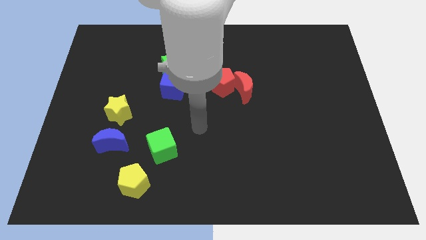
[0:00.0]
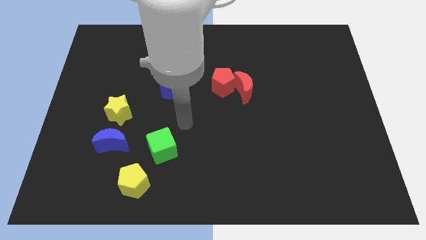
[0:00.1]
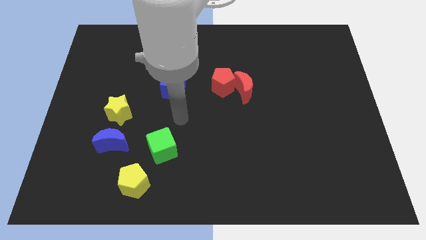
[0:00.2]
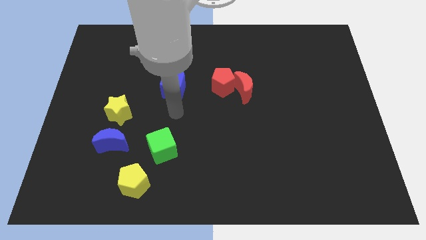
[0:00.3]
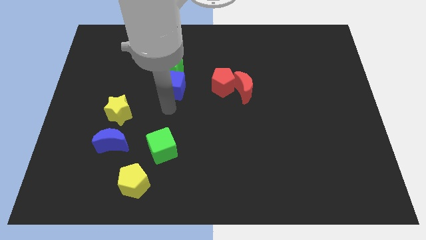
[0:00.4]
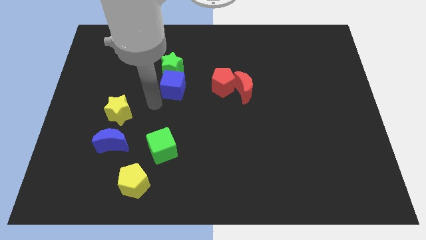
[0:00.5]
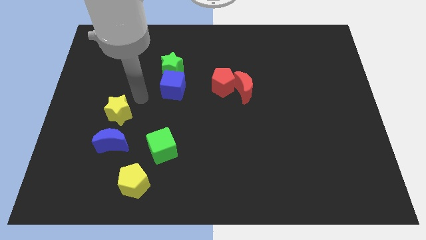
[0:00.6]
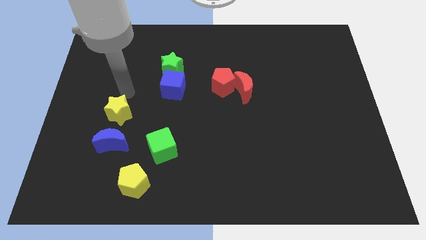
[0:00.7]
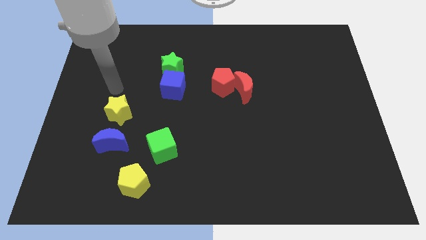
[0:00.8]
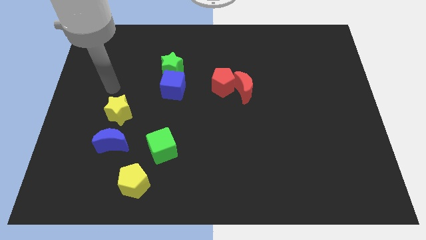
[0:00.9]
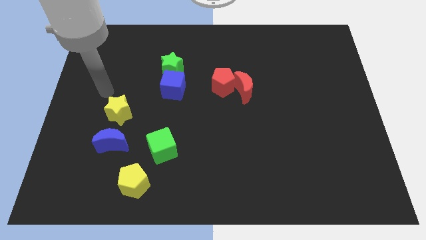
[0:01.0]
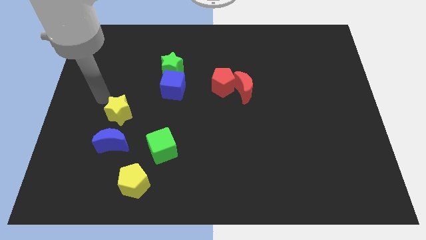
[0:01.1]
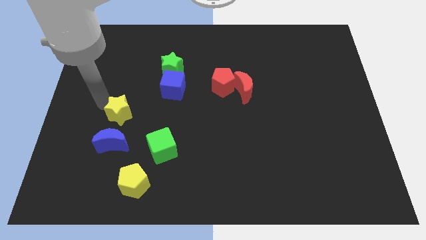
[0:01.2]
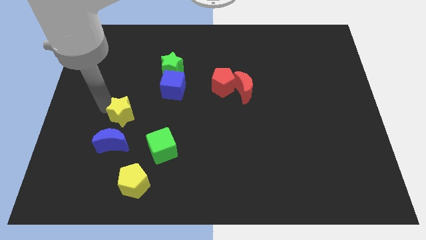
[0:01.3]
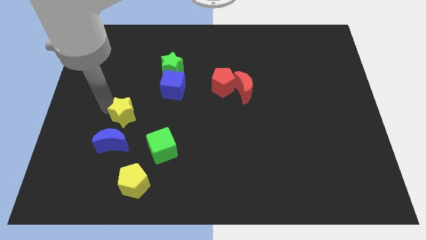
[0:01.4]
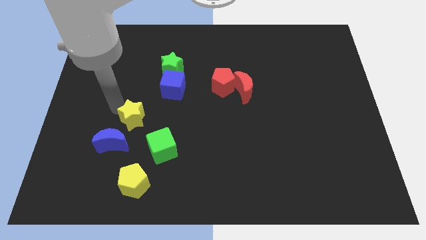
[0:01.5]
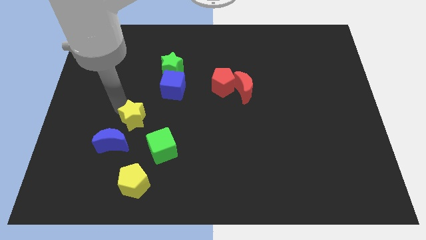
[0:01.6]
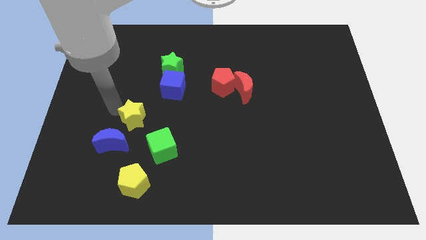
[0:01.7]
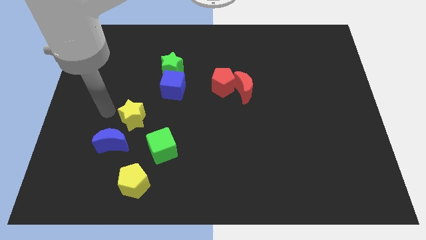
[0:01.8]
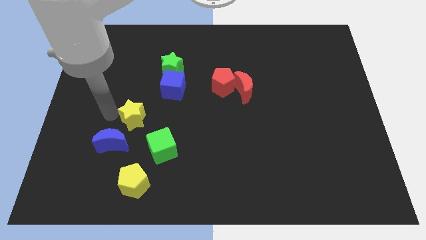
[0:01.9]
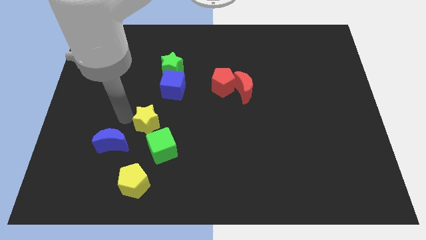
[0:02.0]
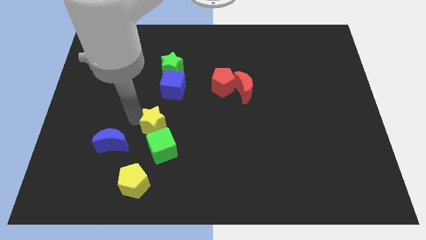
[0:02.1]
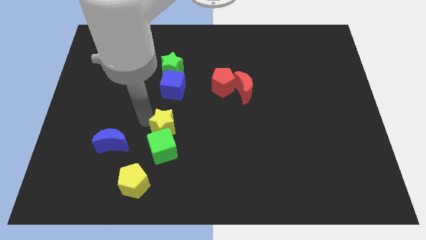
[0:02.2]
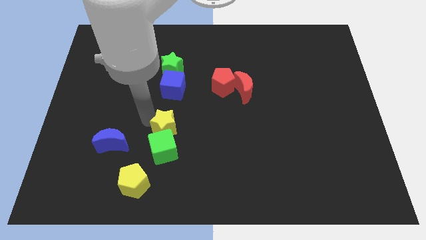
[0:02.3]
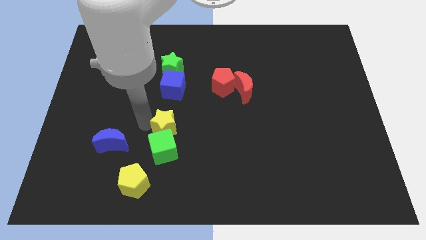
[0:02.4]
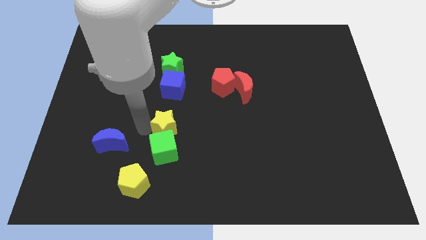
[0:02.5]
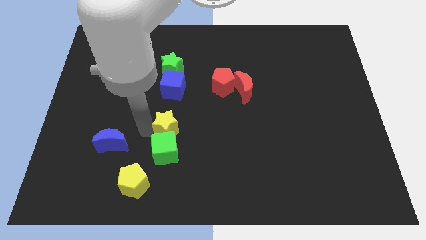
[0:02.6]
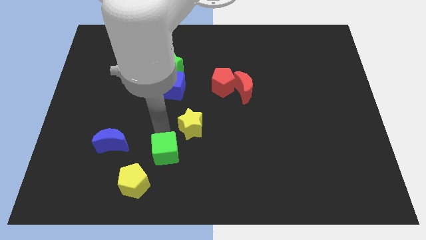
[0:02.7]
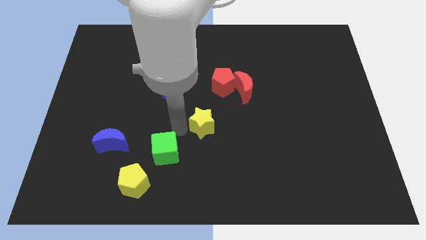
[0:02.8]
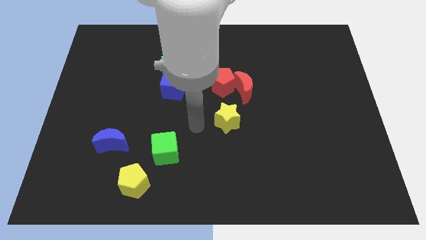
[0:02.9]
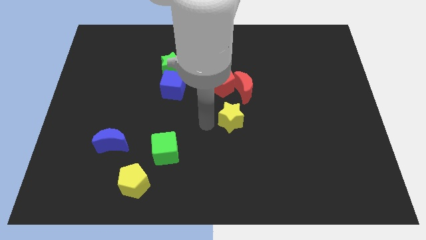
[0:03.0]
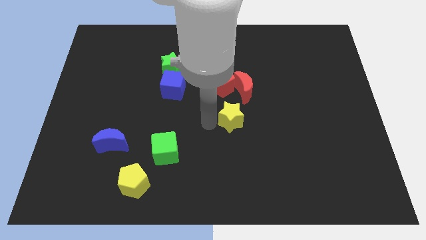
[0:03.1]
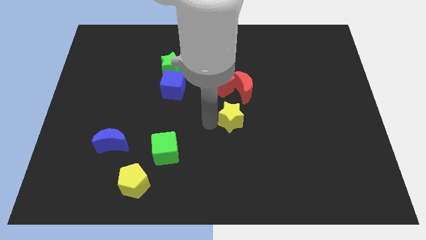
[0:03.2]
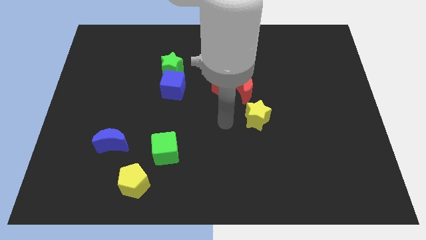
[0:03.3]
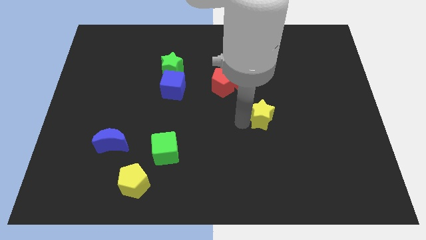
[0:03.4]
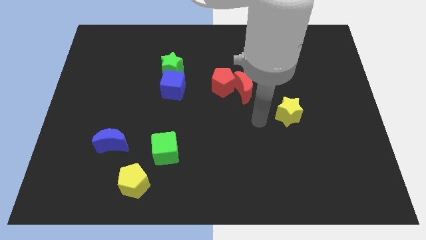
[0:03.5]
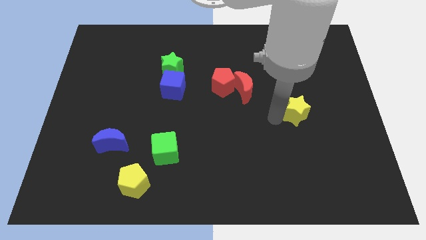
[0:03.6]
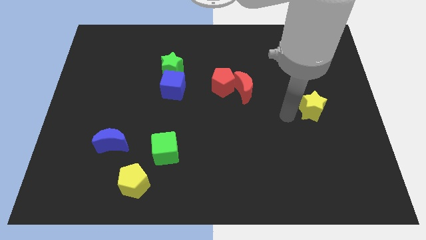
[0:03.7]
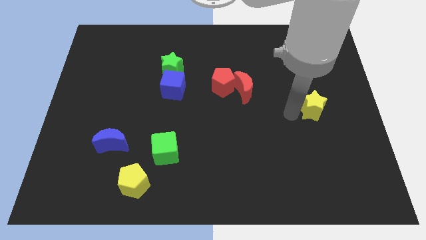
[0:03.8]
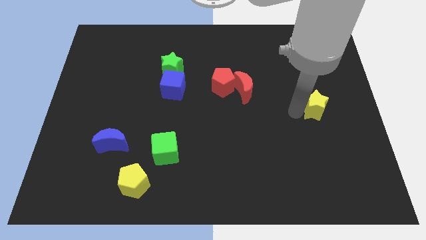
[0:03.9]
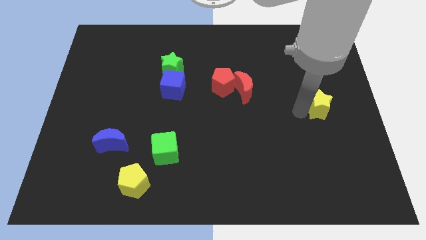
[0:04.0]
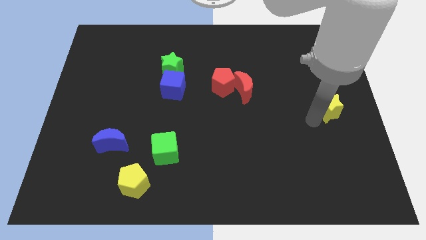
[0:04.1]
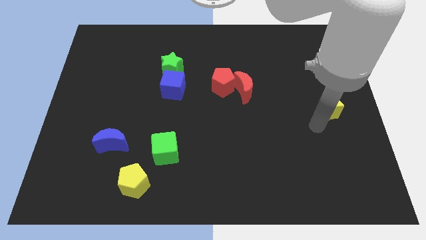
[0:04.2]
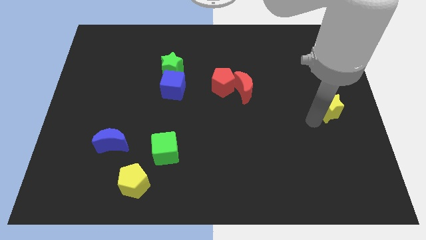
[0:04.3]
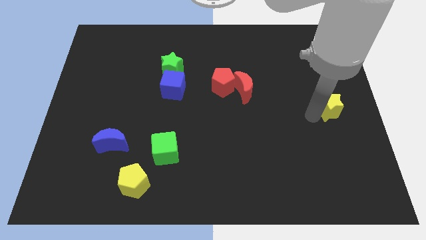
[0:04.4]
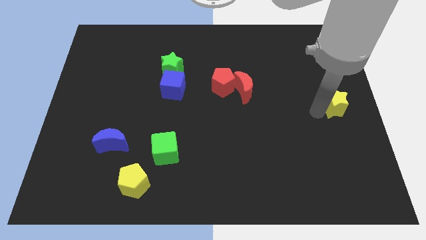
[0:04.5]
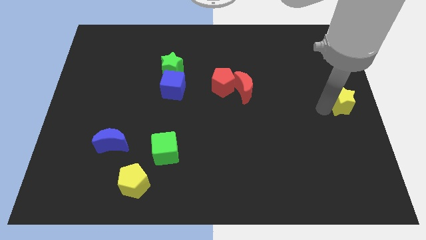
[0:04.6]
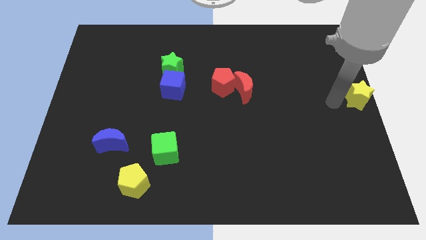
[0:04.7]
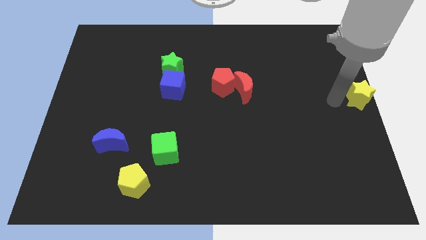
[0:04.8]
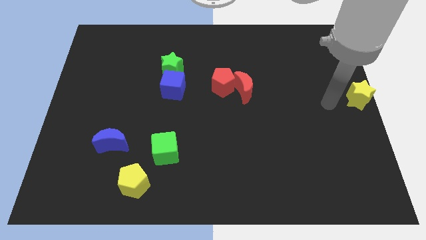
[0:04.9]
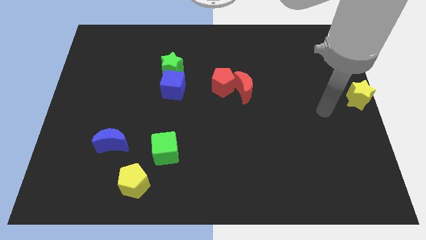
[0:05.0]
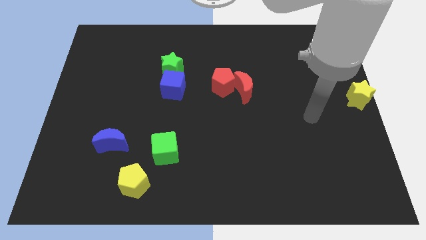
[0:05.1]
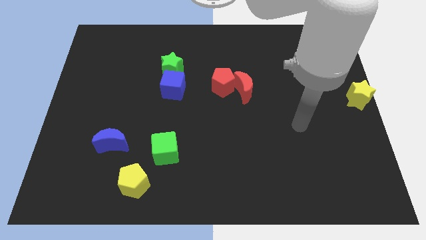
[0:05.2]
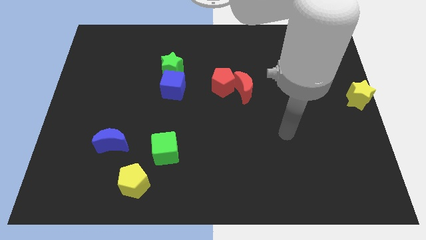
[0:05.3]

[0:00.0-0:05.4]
move the yellow star to the right of the board

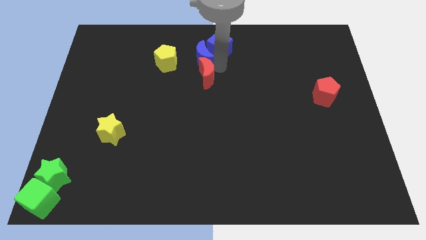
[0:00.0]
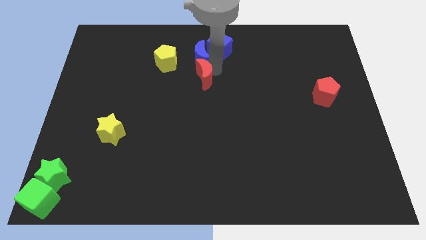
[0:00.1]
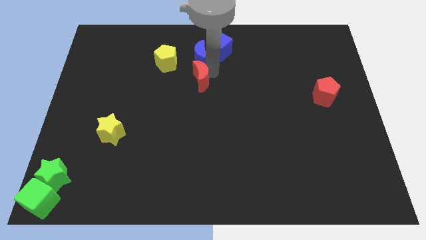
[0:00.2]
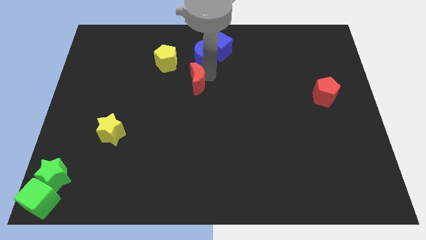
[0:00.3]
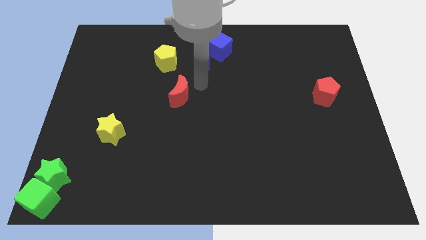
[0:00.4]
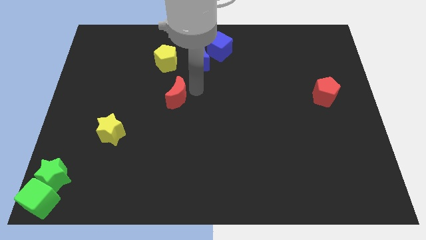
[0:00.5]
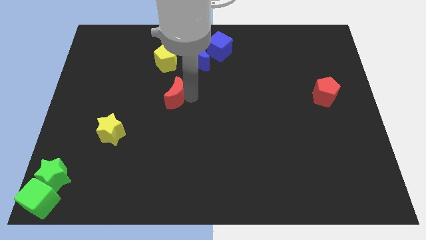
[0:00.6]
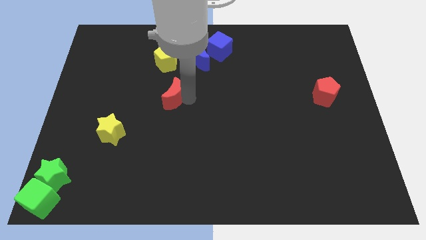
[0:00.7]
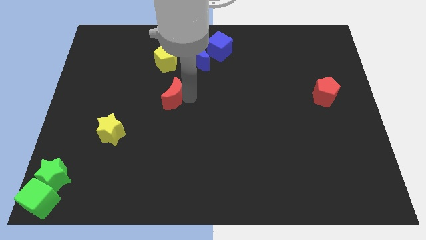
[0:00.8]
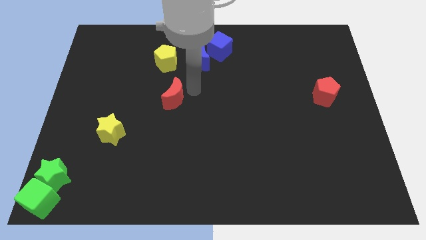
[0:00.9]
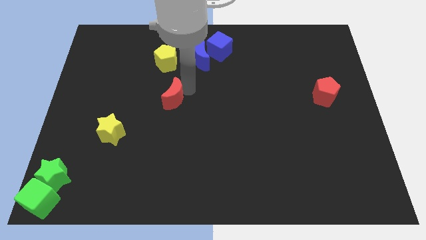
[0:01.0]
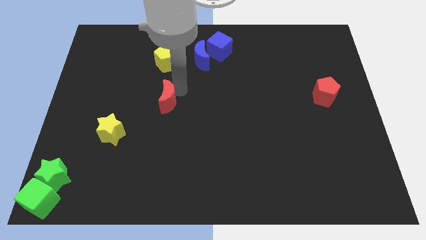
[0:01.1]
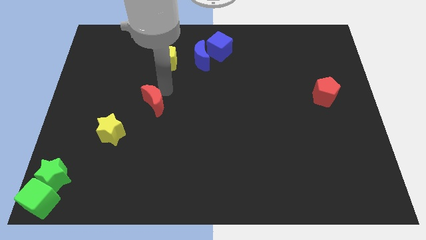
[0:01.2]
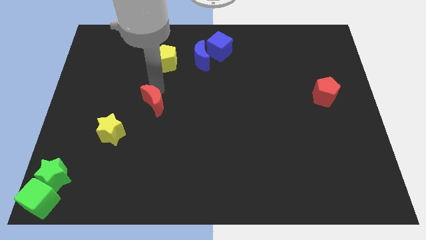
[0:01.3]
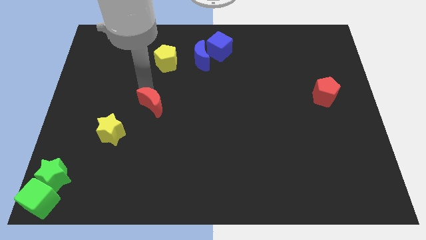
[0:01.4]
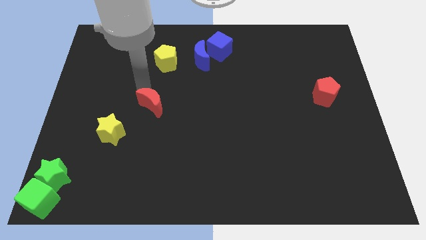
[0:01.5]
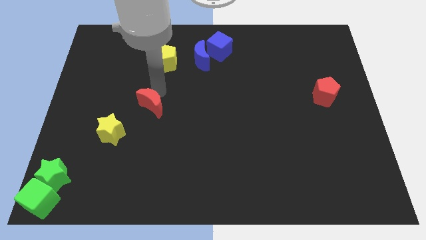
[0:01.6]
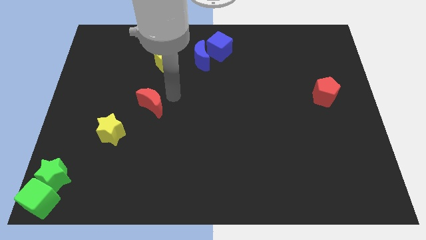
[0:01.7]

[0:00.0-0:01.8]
place the red moon in between blue moon and yellow star

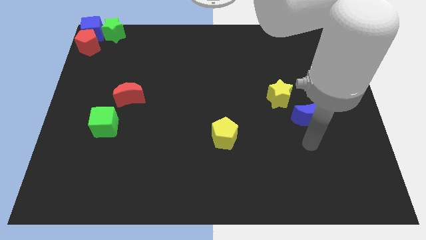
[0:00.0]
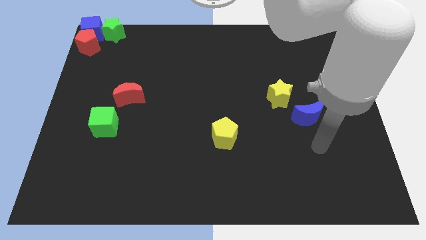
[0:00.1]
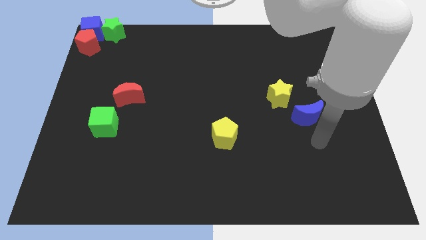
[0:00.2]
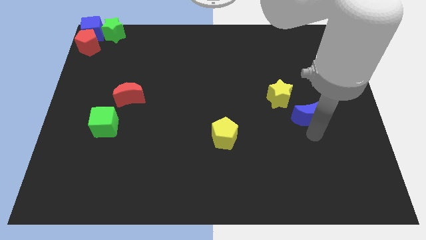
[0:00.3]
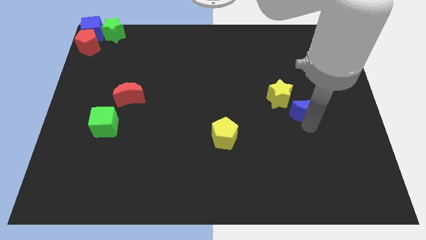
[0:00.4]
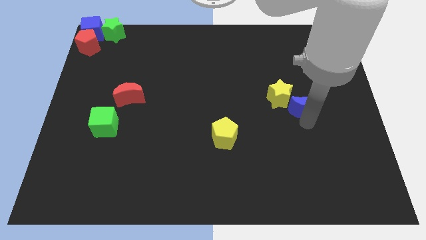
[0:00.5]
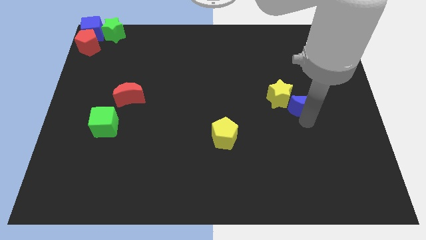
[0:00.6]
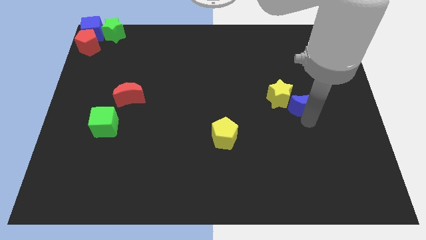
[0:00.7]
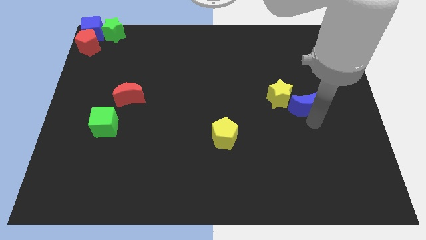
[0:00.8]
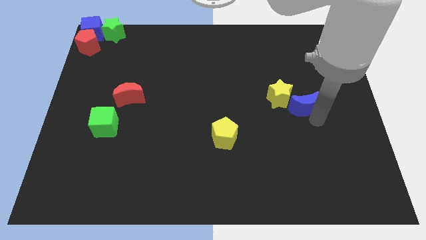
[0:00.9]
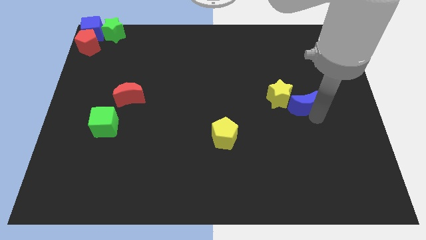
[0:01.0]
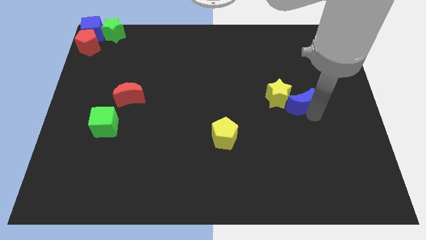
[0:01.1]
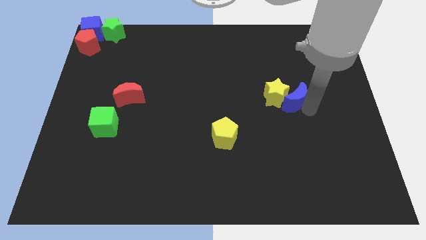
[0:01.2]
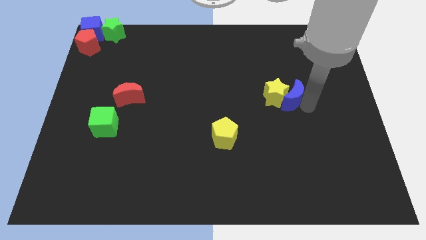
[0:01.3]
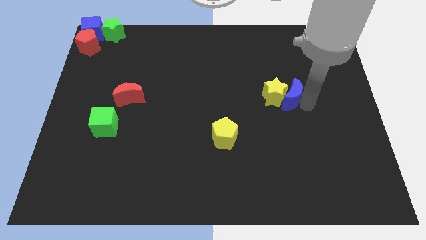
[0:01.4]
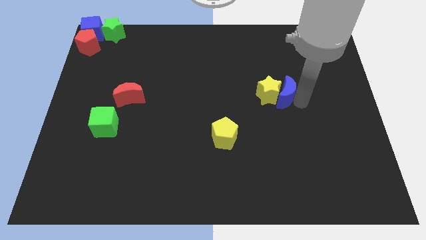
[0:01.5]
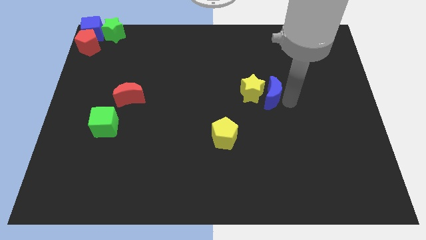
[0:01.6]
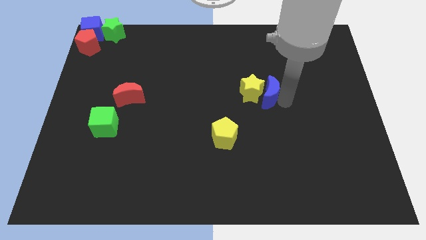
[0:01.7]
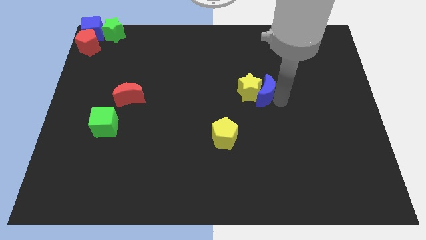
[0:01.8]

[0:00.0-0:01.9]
push the blue moon into the yellow star
